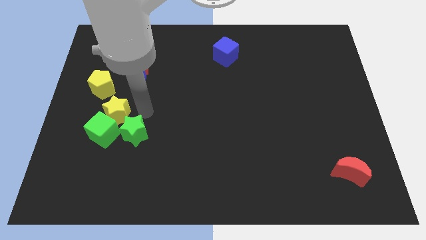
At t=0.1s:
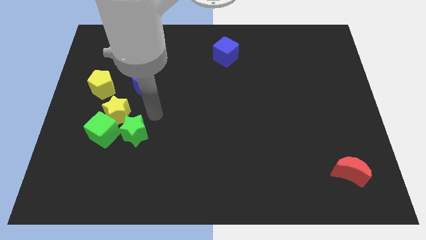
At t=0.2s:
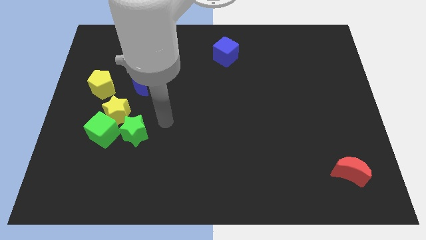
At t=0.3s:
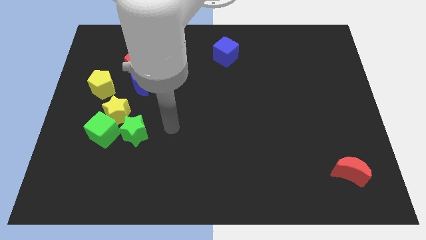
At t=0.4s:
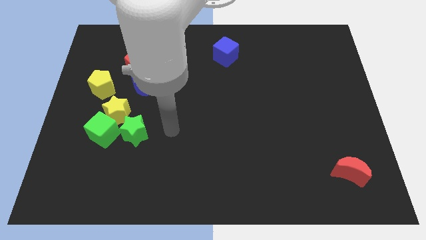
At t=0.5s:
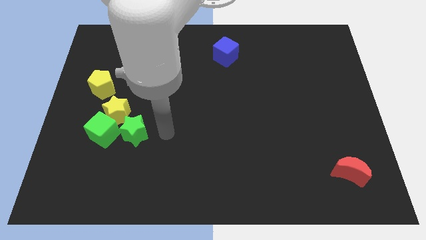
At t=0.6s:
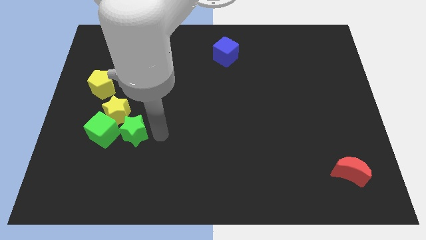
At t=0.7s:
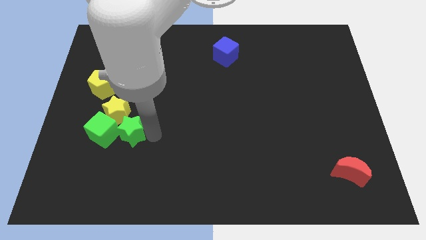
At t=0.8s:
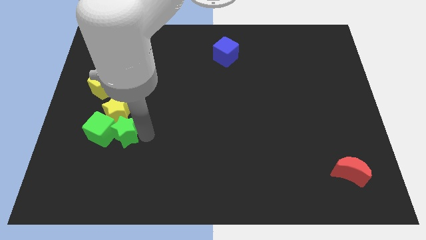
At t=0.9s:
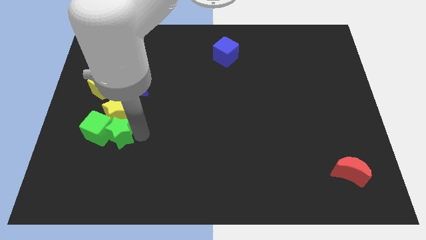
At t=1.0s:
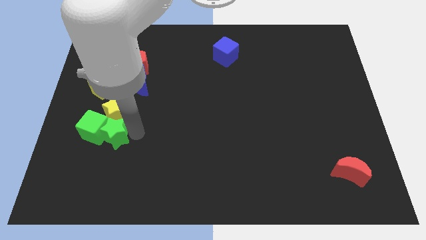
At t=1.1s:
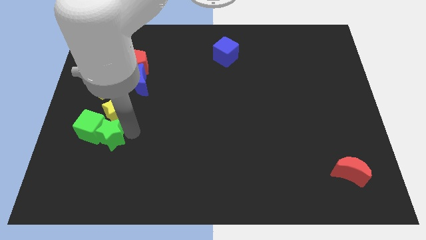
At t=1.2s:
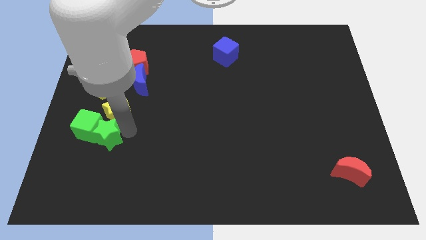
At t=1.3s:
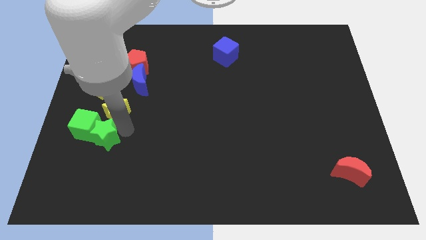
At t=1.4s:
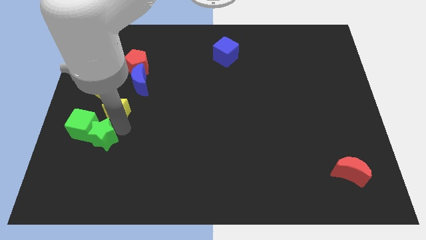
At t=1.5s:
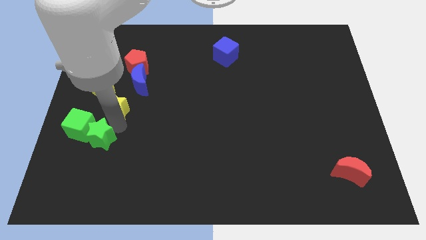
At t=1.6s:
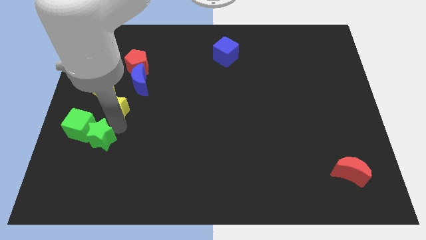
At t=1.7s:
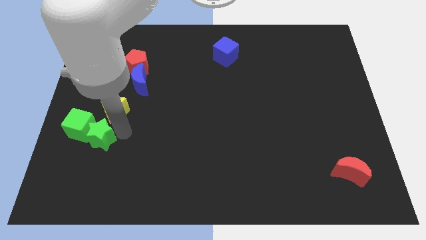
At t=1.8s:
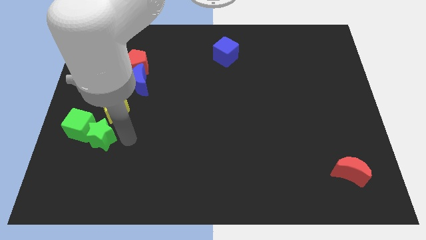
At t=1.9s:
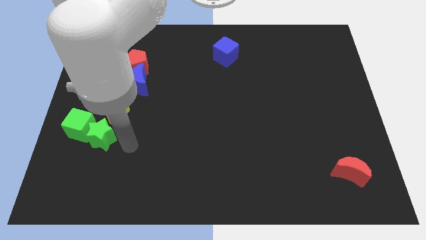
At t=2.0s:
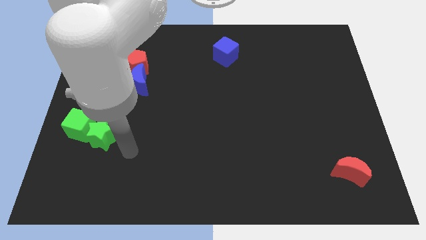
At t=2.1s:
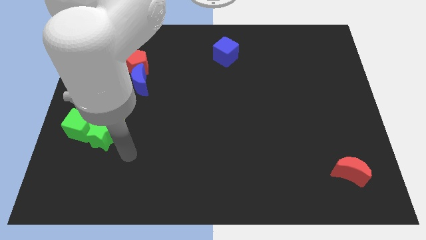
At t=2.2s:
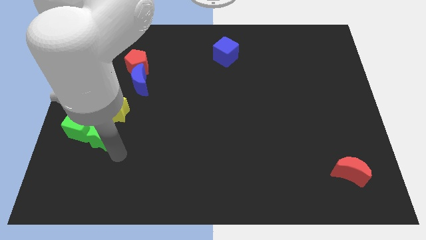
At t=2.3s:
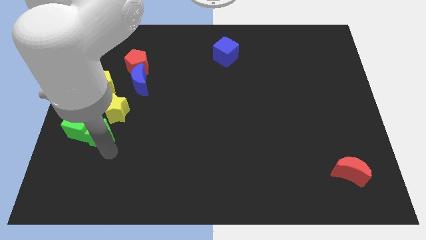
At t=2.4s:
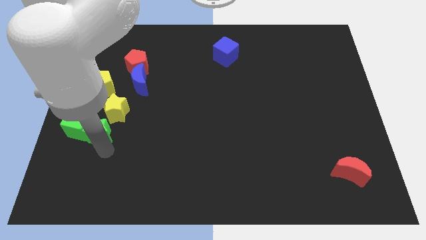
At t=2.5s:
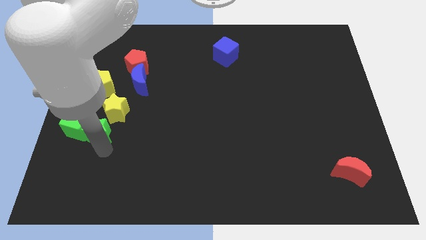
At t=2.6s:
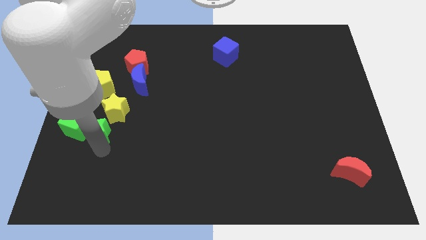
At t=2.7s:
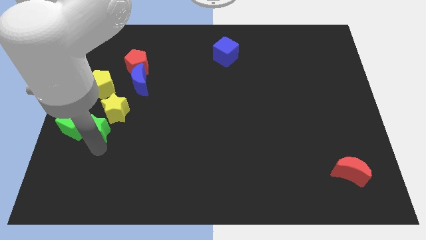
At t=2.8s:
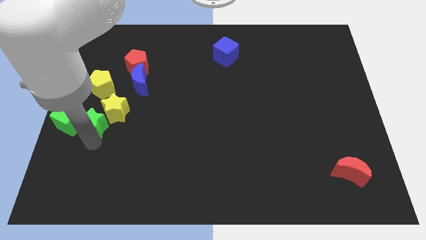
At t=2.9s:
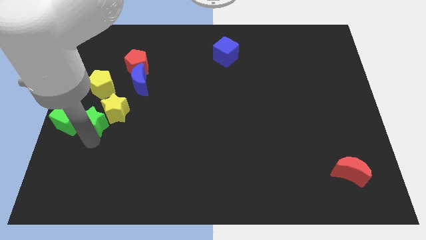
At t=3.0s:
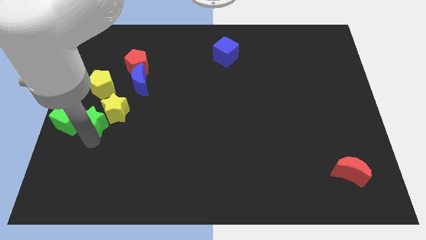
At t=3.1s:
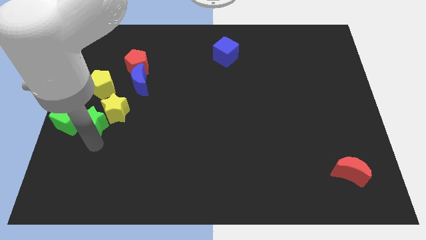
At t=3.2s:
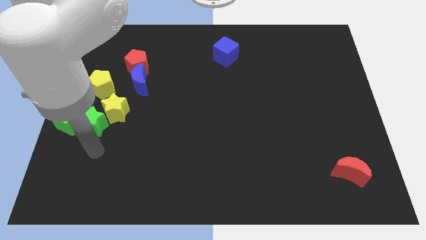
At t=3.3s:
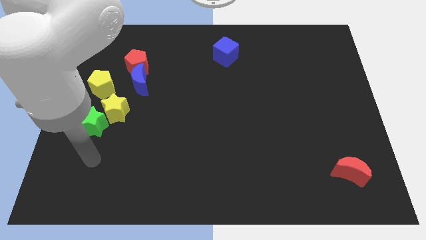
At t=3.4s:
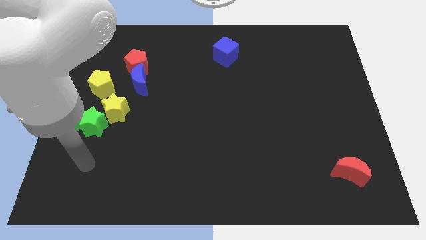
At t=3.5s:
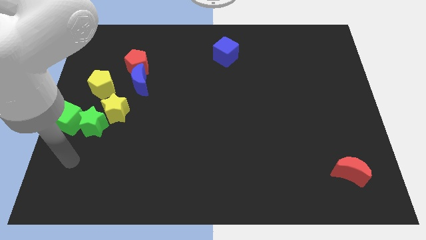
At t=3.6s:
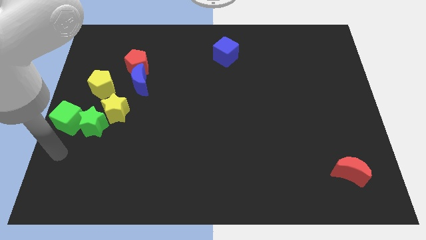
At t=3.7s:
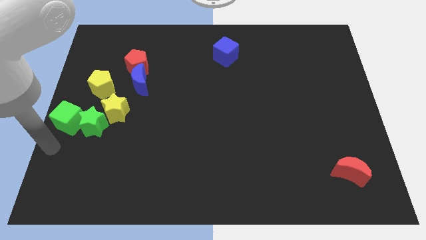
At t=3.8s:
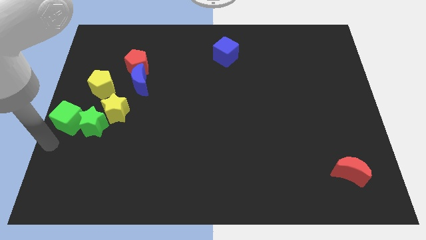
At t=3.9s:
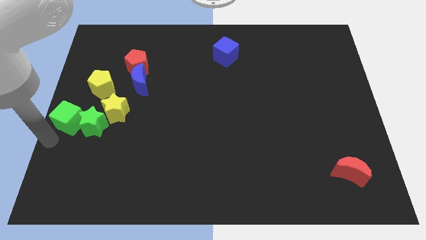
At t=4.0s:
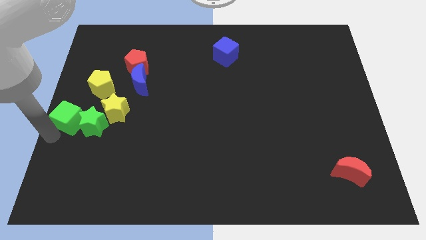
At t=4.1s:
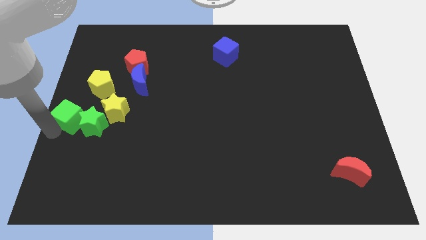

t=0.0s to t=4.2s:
push the green cube with the green star to the left

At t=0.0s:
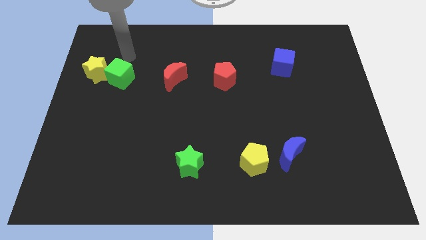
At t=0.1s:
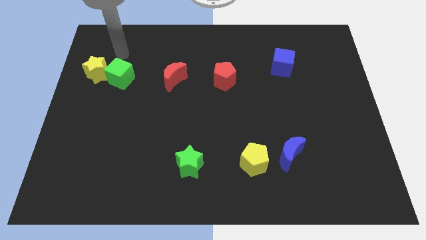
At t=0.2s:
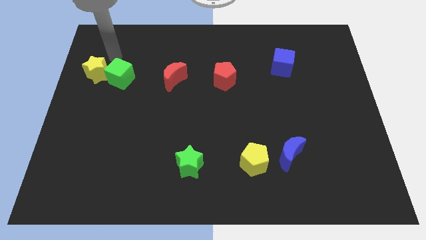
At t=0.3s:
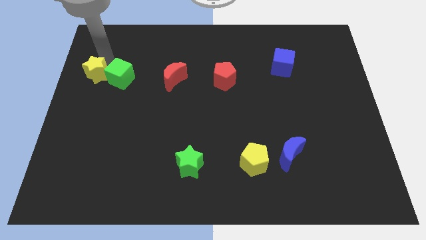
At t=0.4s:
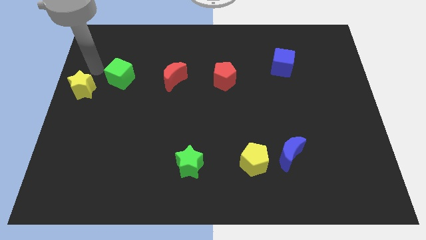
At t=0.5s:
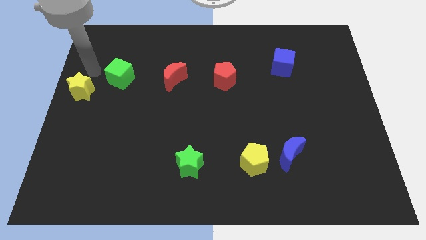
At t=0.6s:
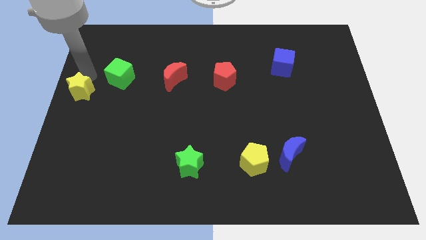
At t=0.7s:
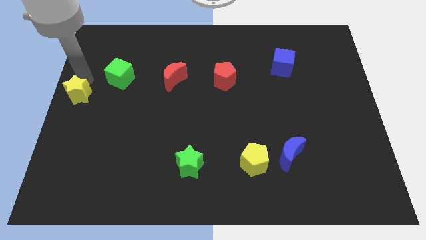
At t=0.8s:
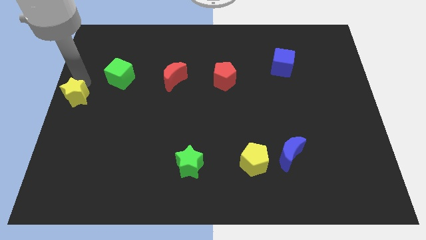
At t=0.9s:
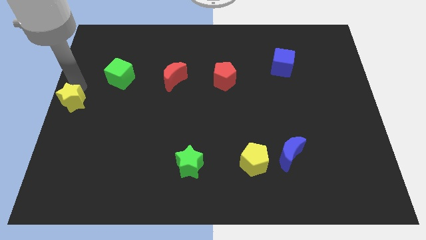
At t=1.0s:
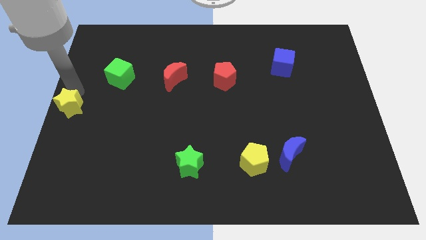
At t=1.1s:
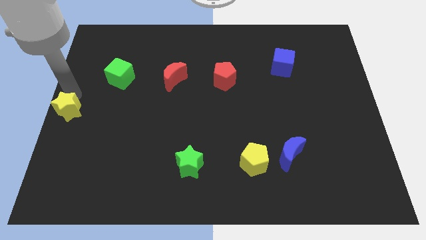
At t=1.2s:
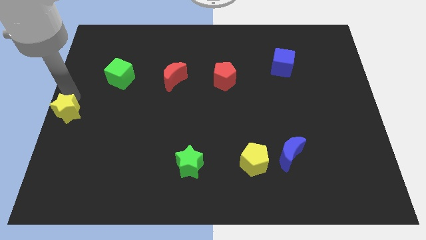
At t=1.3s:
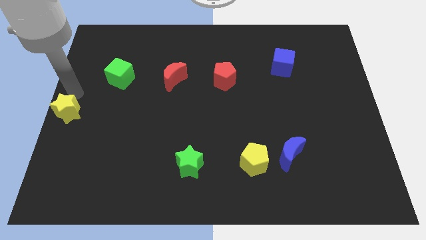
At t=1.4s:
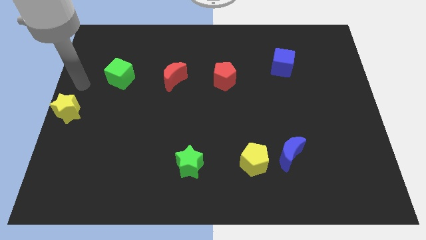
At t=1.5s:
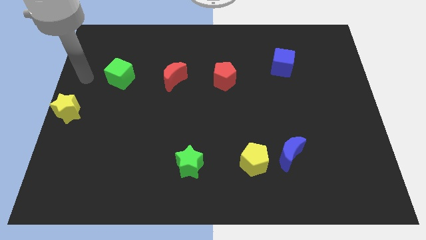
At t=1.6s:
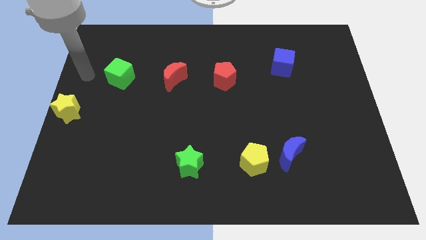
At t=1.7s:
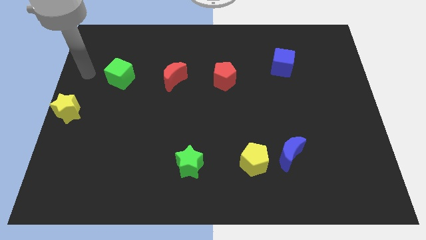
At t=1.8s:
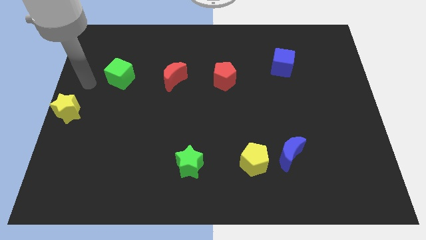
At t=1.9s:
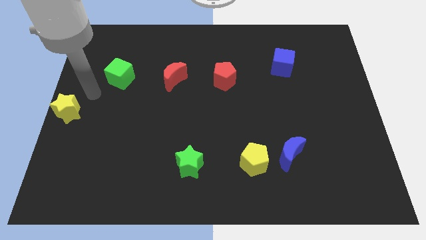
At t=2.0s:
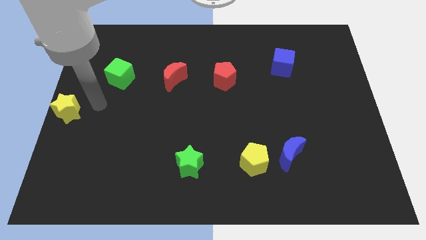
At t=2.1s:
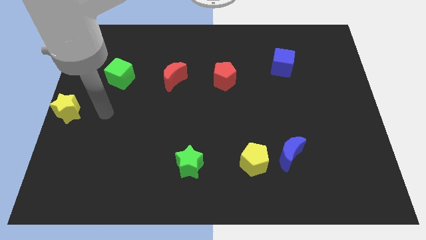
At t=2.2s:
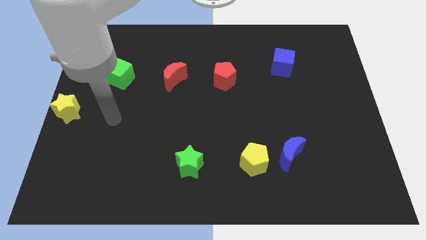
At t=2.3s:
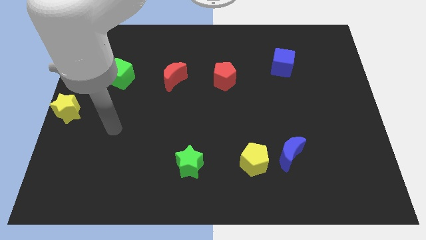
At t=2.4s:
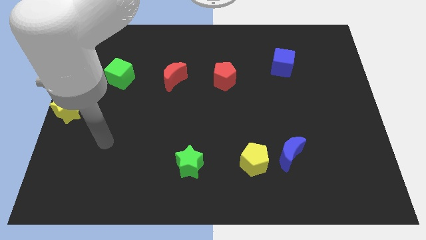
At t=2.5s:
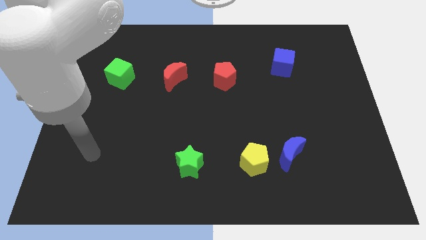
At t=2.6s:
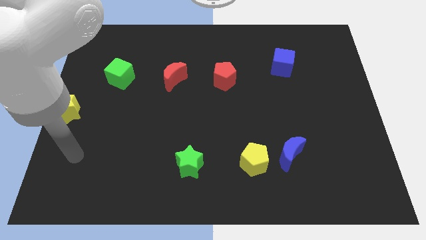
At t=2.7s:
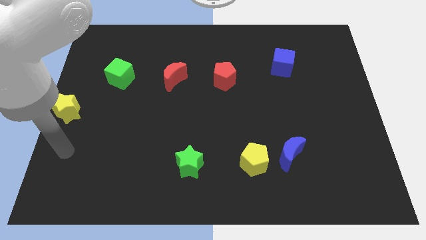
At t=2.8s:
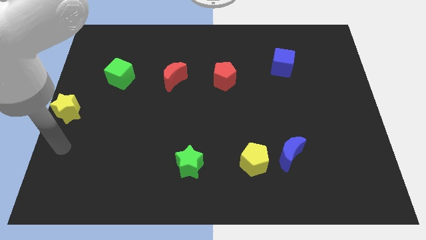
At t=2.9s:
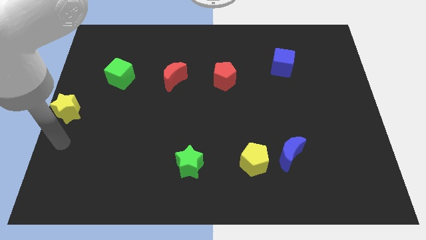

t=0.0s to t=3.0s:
push the yellow star to the left center of the board

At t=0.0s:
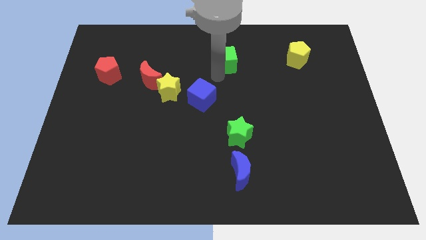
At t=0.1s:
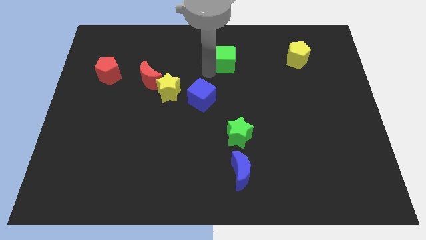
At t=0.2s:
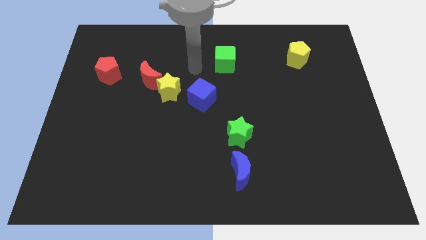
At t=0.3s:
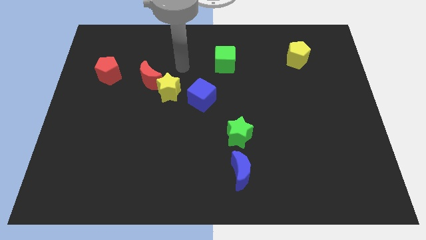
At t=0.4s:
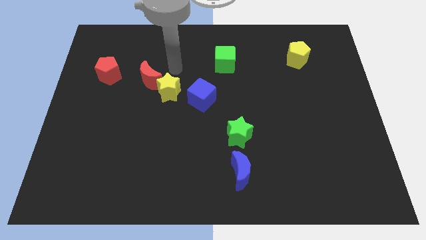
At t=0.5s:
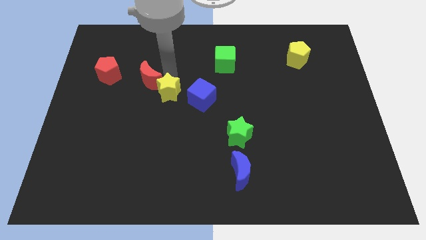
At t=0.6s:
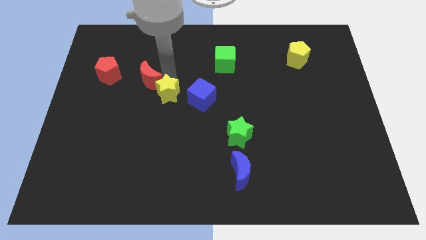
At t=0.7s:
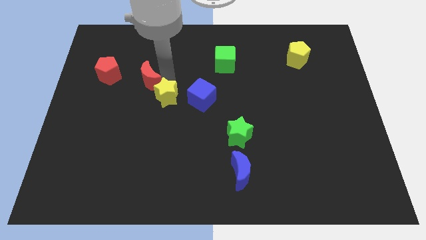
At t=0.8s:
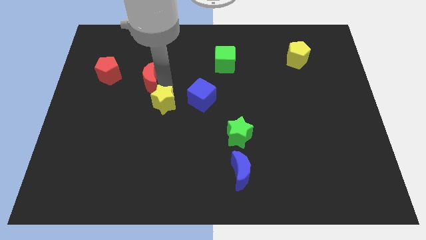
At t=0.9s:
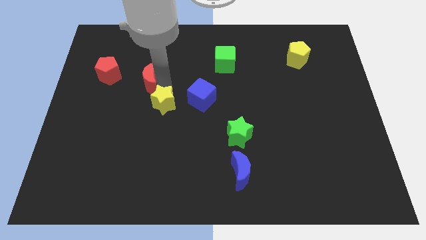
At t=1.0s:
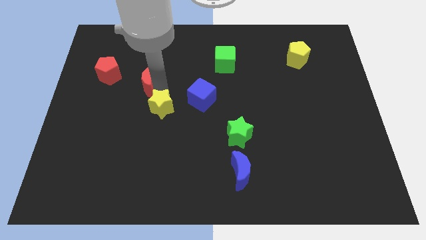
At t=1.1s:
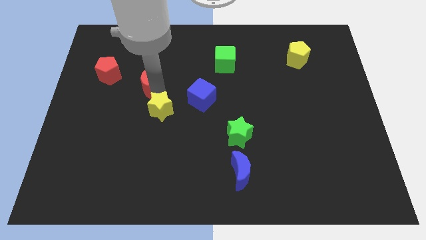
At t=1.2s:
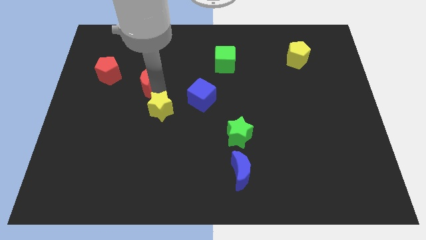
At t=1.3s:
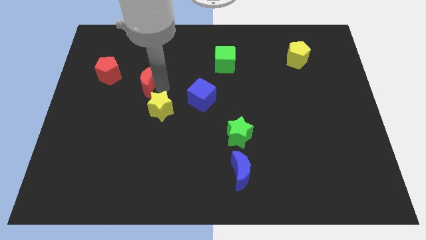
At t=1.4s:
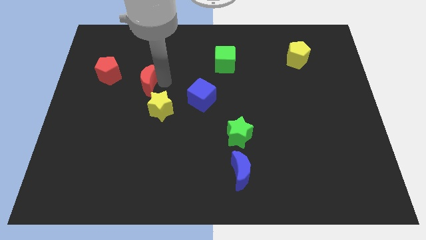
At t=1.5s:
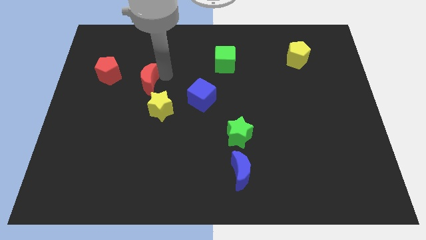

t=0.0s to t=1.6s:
move the yellow star slightly towards down
